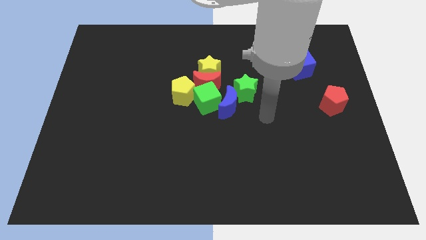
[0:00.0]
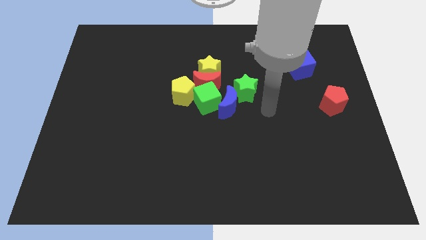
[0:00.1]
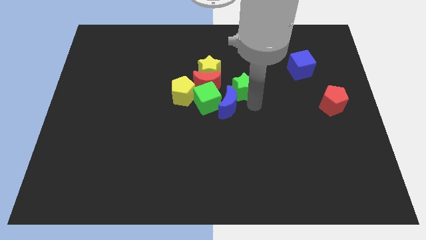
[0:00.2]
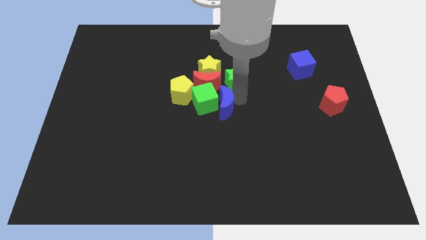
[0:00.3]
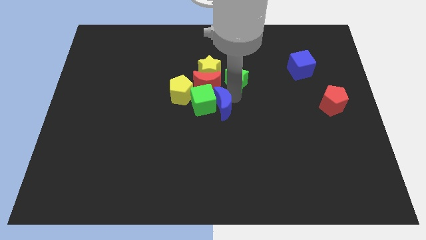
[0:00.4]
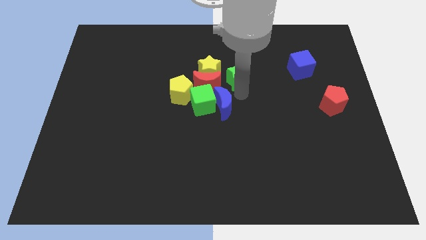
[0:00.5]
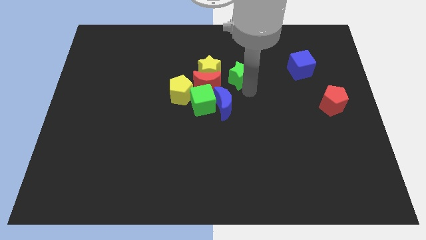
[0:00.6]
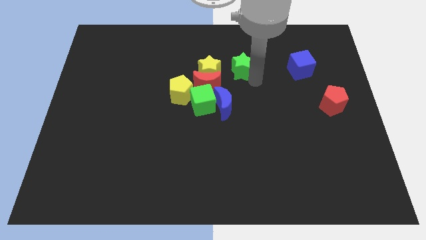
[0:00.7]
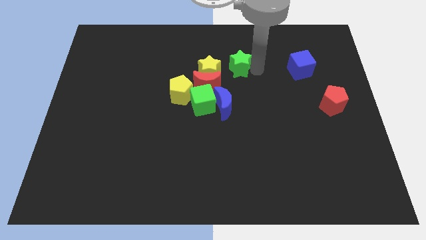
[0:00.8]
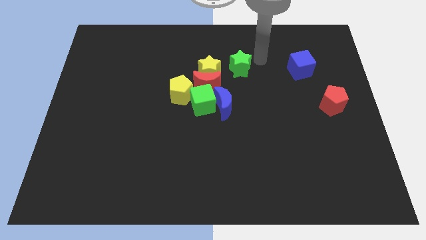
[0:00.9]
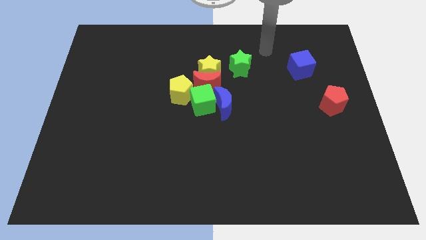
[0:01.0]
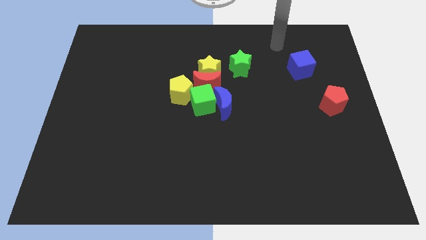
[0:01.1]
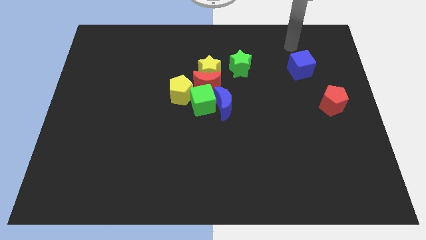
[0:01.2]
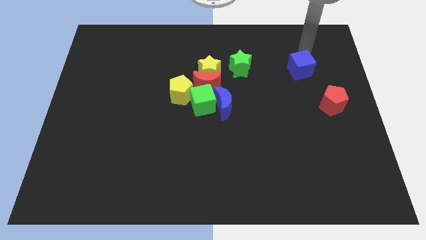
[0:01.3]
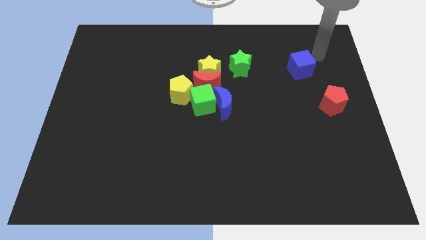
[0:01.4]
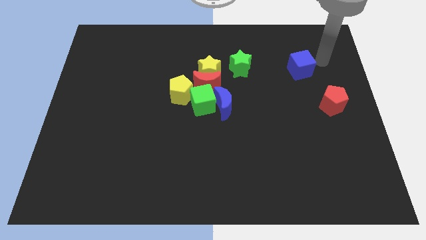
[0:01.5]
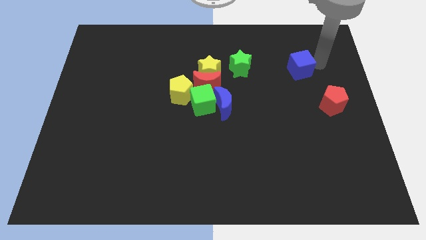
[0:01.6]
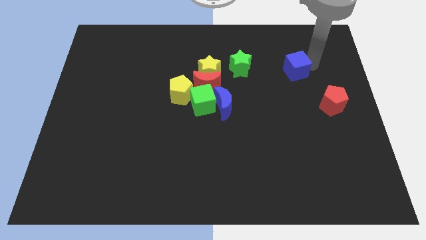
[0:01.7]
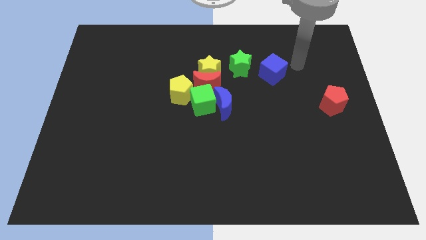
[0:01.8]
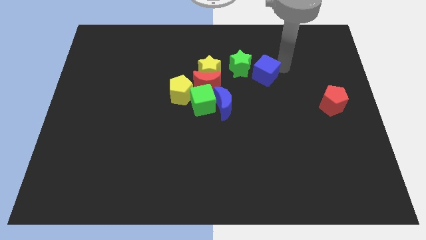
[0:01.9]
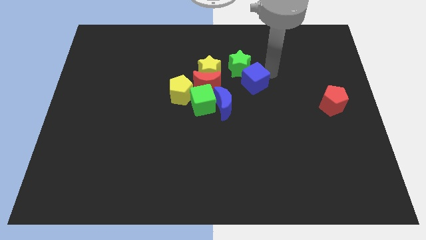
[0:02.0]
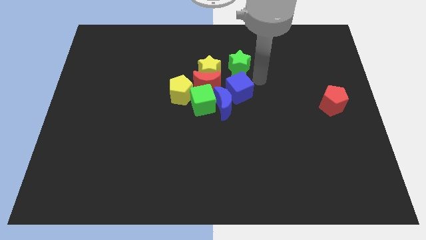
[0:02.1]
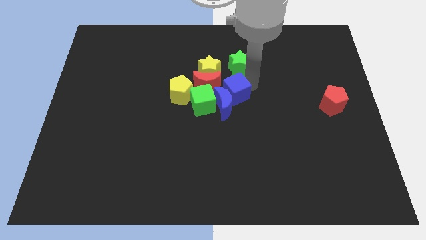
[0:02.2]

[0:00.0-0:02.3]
place blue cube below green star

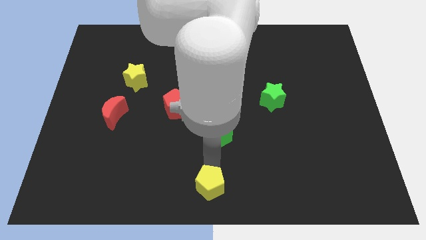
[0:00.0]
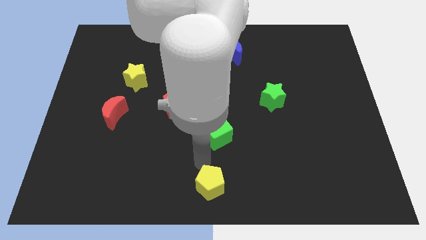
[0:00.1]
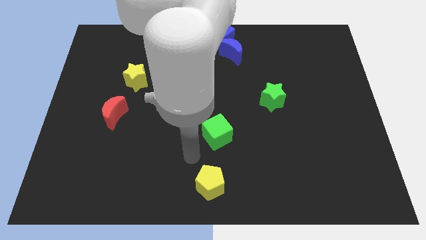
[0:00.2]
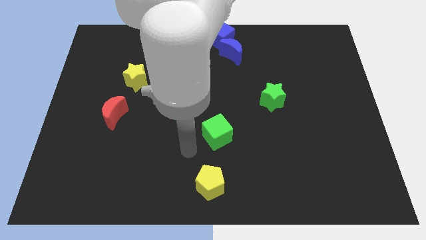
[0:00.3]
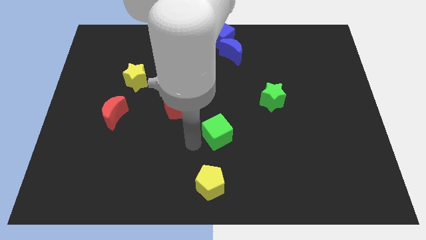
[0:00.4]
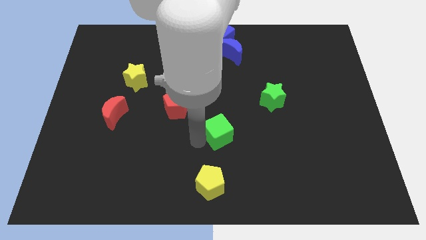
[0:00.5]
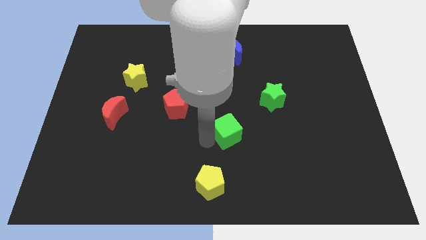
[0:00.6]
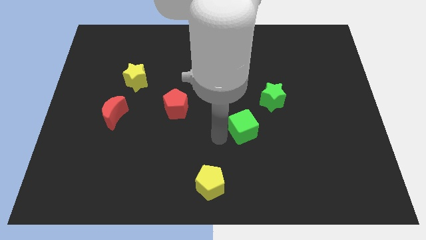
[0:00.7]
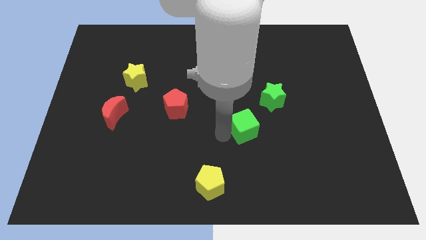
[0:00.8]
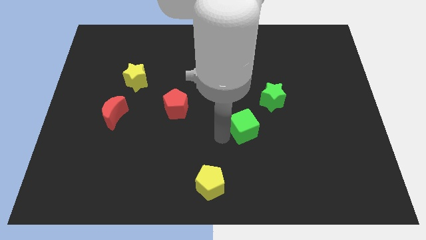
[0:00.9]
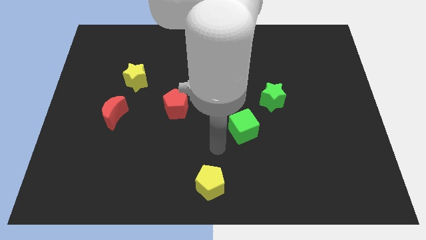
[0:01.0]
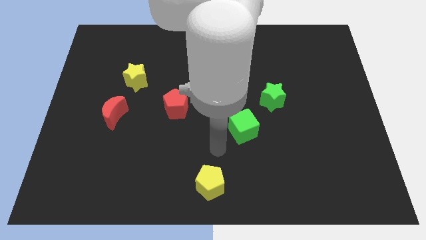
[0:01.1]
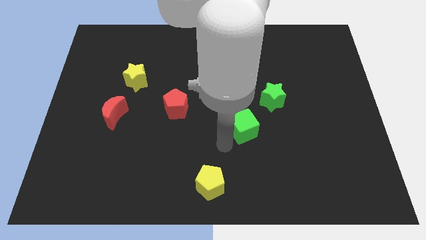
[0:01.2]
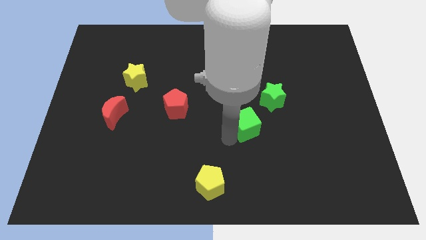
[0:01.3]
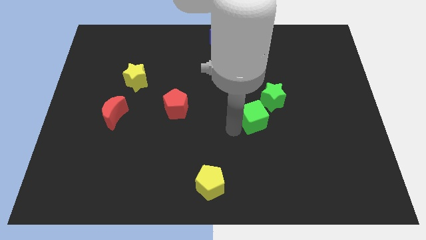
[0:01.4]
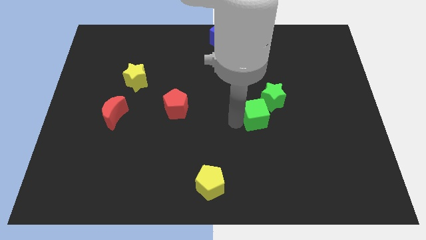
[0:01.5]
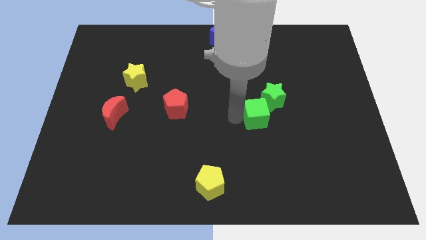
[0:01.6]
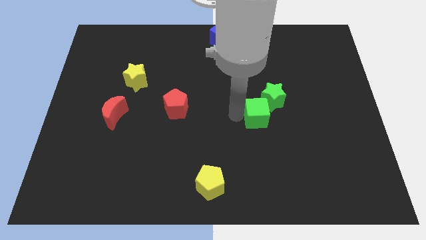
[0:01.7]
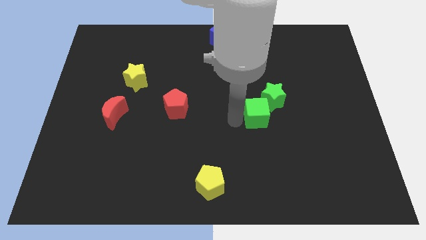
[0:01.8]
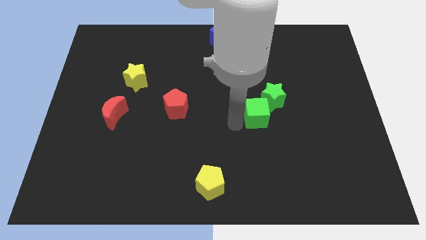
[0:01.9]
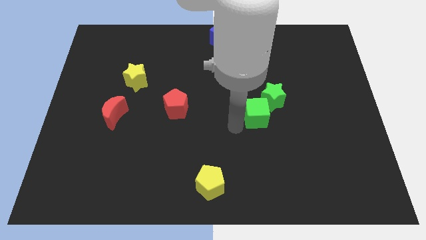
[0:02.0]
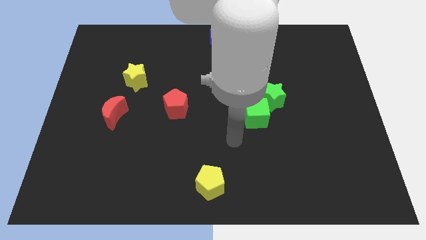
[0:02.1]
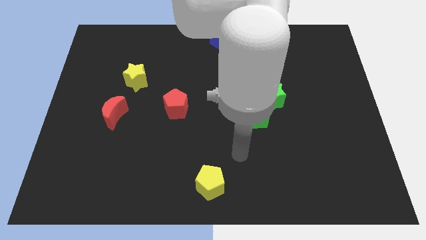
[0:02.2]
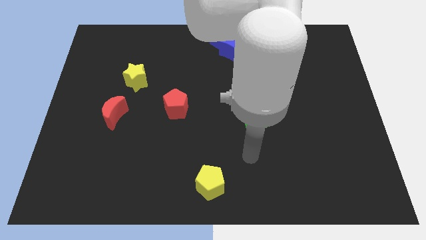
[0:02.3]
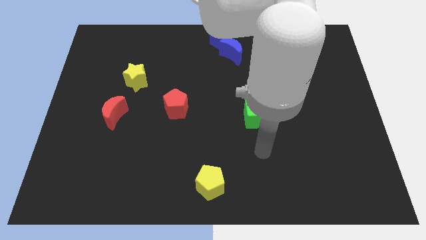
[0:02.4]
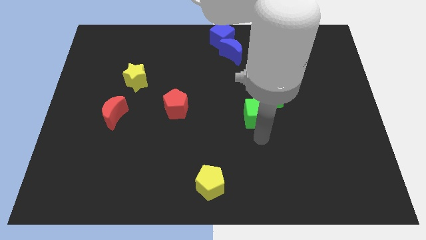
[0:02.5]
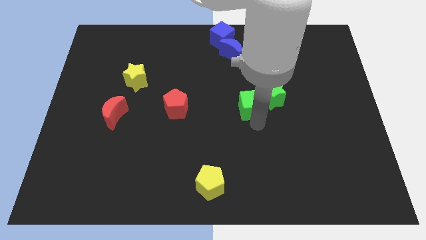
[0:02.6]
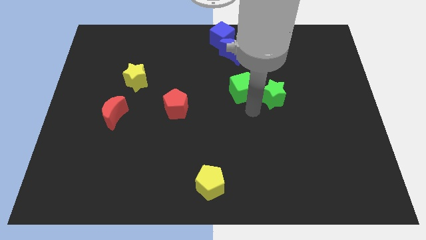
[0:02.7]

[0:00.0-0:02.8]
push the green cube to the left of the green star

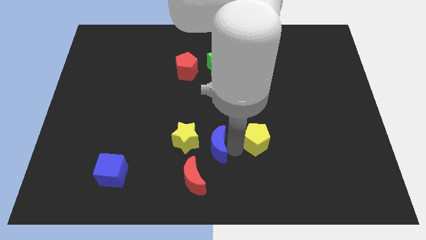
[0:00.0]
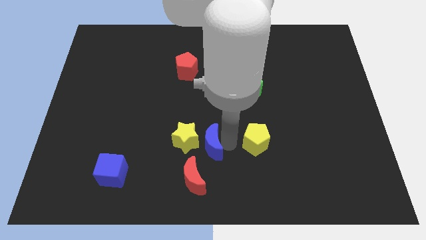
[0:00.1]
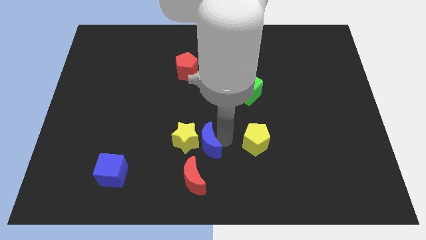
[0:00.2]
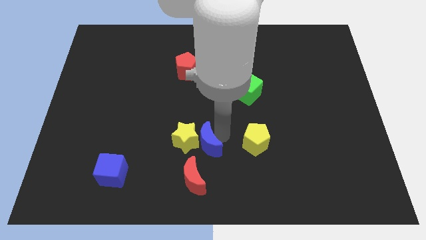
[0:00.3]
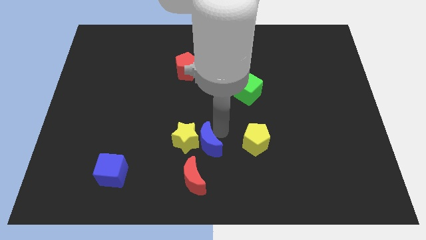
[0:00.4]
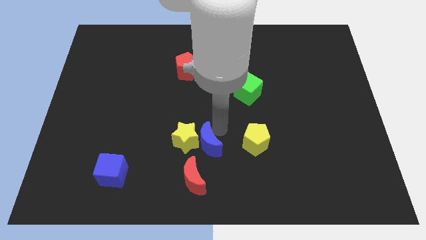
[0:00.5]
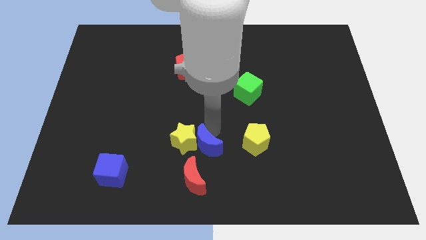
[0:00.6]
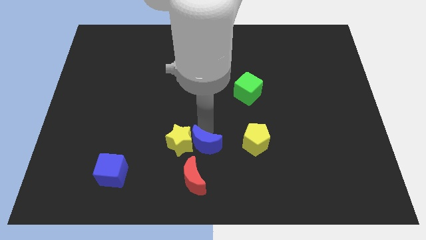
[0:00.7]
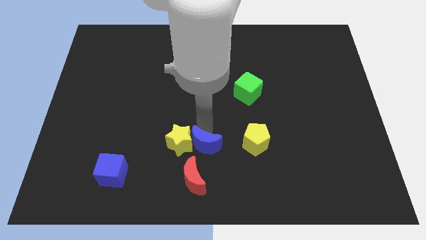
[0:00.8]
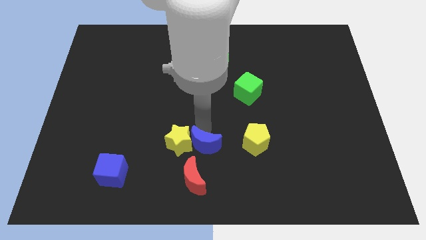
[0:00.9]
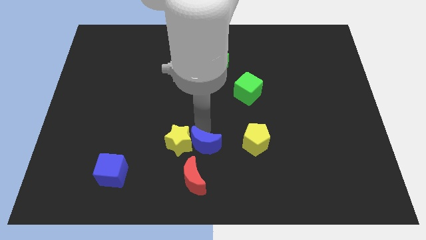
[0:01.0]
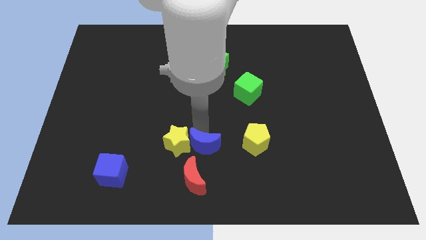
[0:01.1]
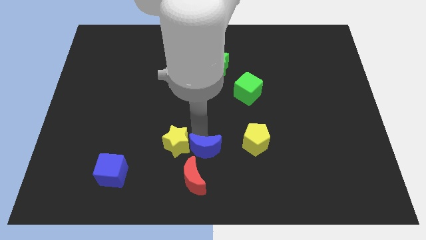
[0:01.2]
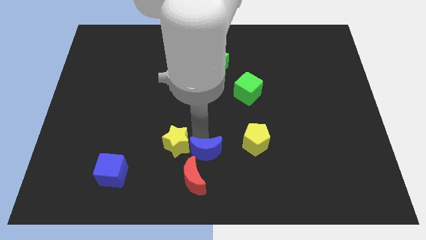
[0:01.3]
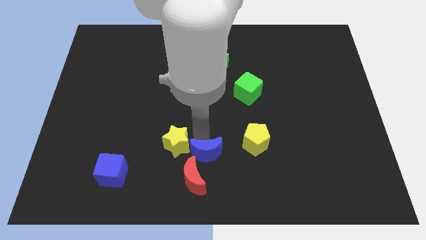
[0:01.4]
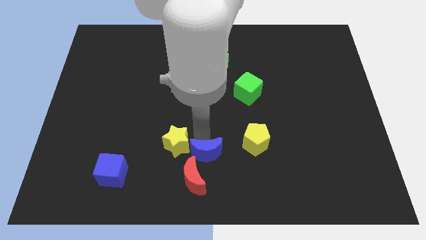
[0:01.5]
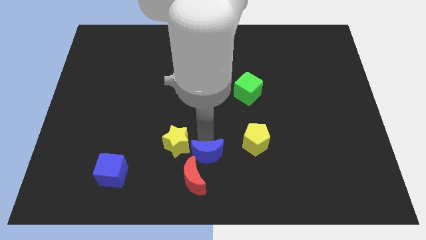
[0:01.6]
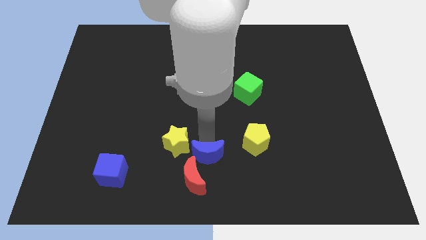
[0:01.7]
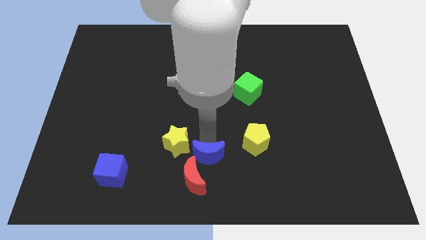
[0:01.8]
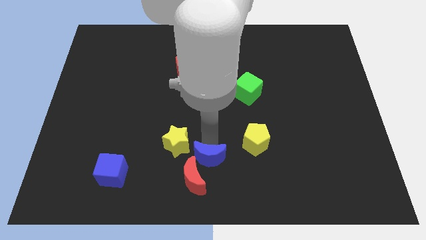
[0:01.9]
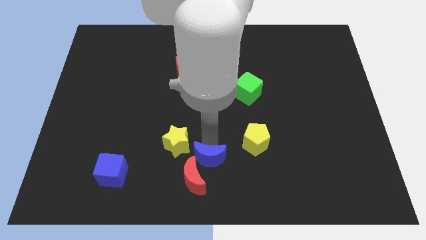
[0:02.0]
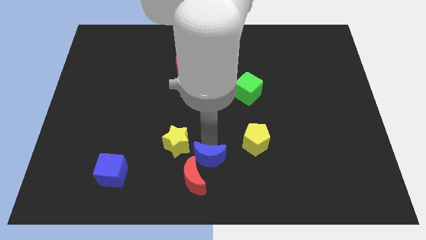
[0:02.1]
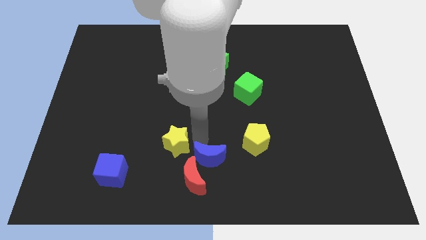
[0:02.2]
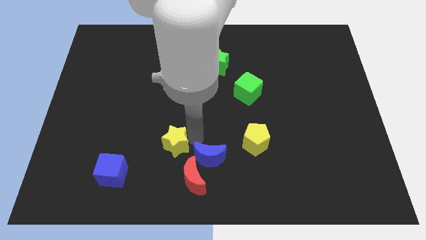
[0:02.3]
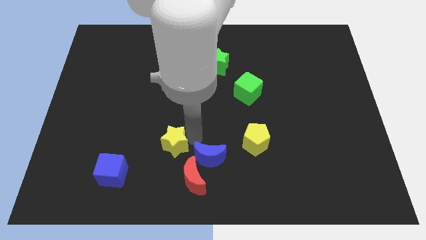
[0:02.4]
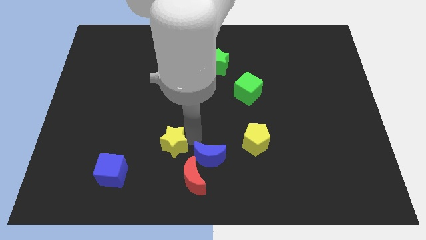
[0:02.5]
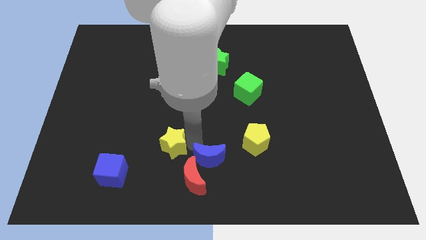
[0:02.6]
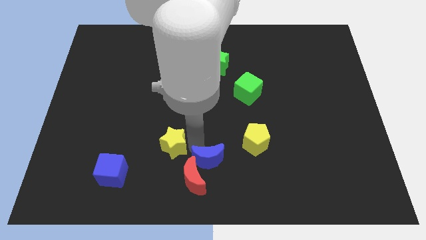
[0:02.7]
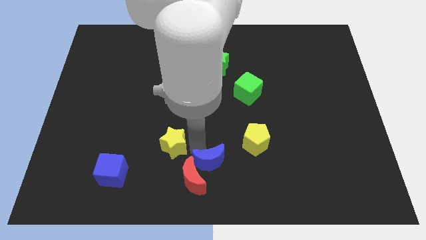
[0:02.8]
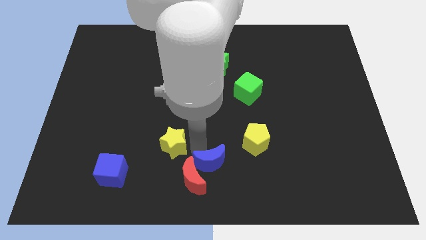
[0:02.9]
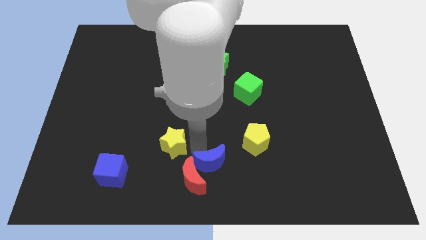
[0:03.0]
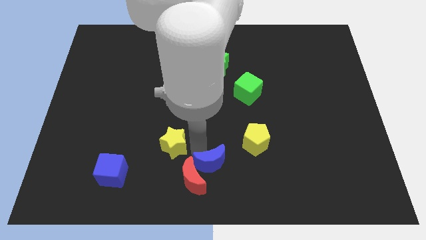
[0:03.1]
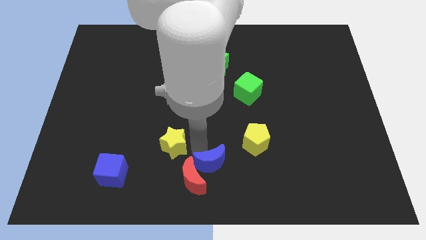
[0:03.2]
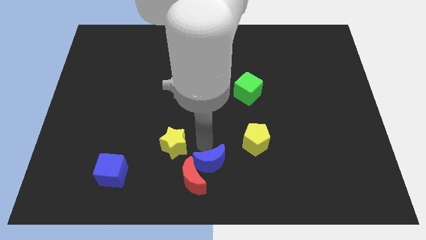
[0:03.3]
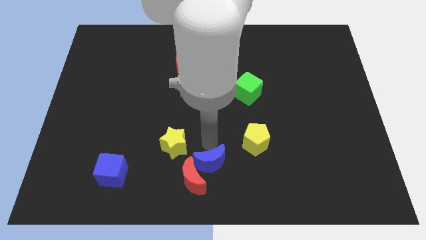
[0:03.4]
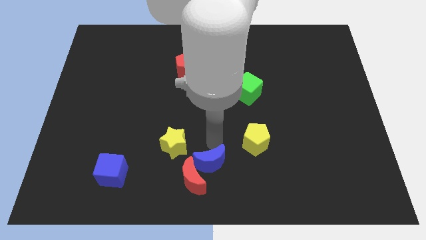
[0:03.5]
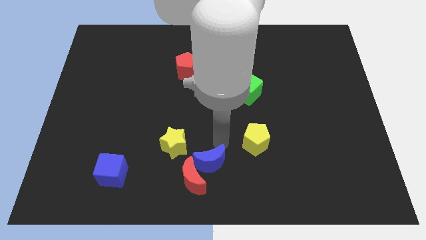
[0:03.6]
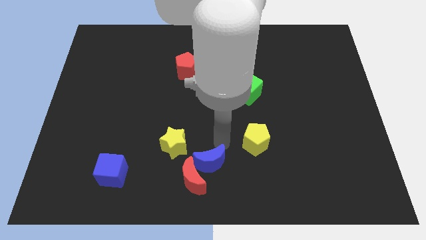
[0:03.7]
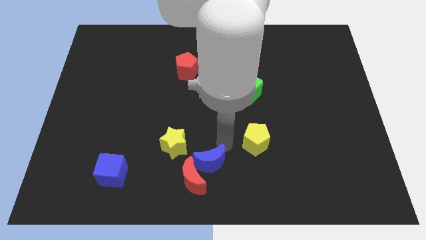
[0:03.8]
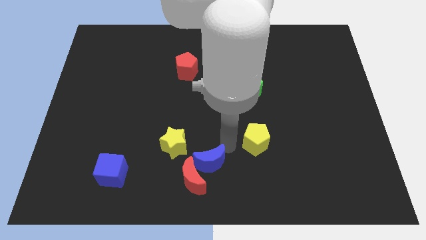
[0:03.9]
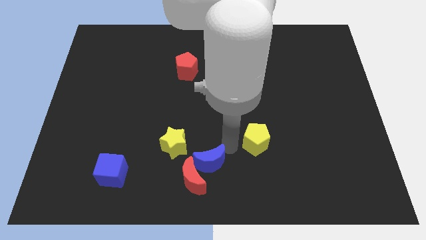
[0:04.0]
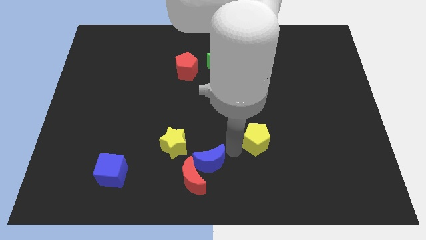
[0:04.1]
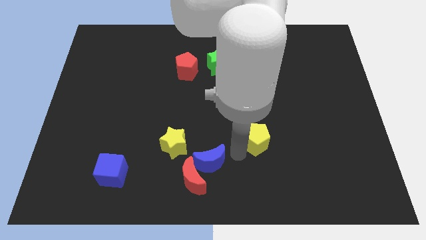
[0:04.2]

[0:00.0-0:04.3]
move the blue moon to the top right side of the red moon
